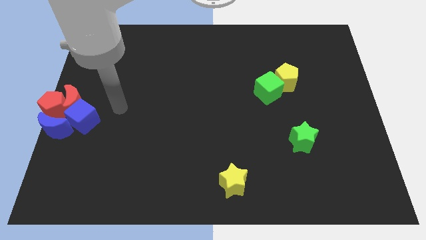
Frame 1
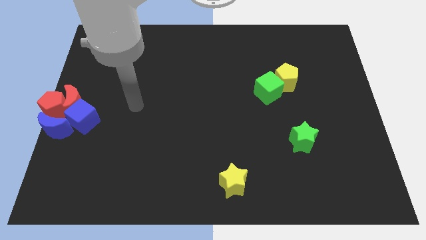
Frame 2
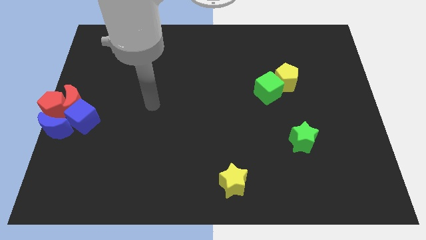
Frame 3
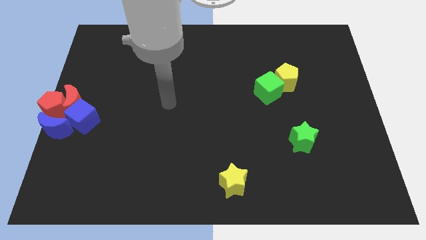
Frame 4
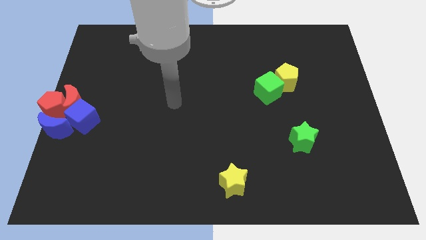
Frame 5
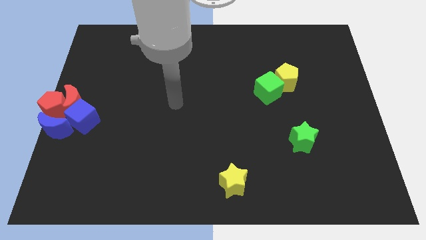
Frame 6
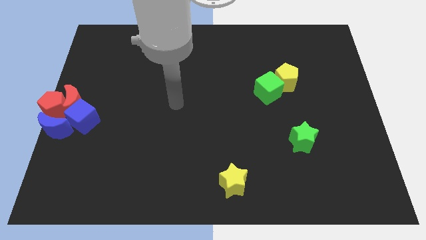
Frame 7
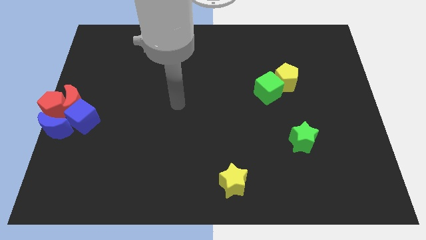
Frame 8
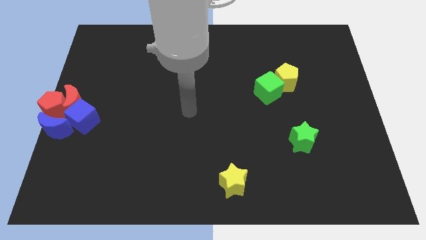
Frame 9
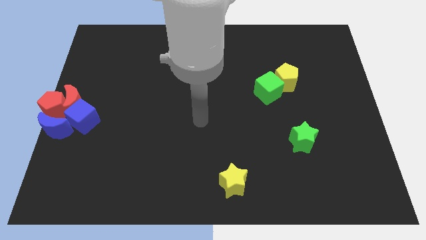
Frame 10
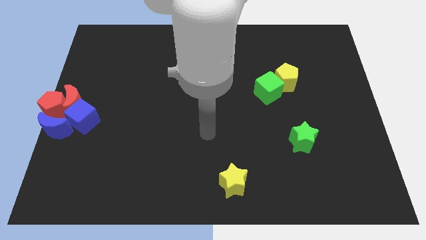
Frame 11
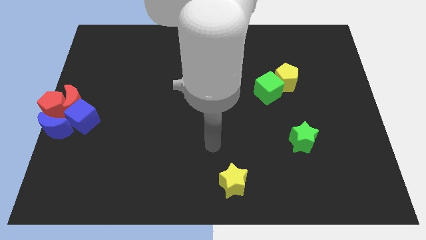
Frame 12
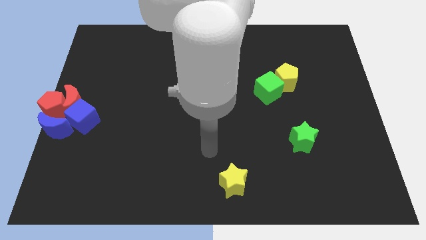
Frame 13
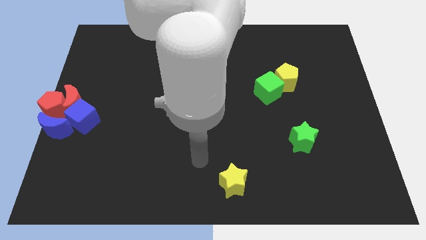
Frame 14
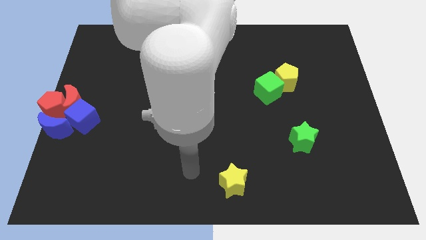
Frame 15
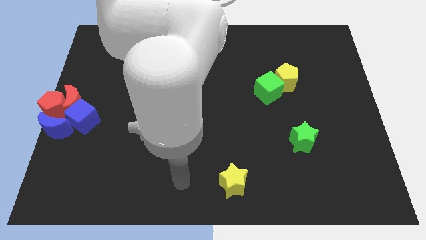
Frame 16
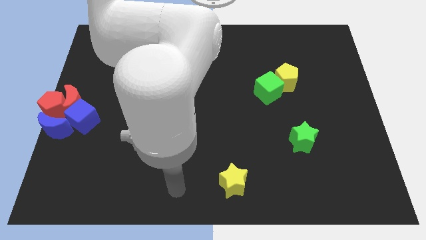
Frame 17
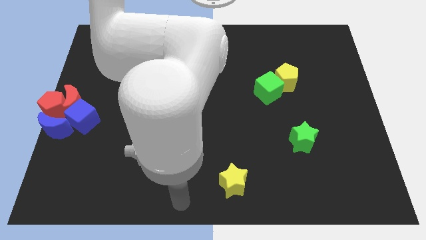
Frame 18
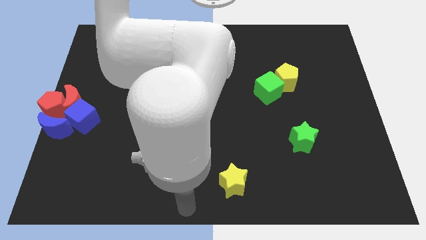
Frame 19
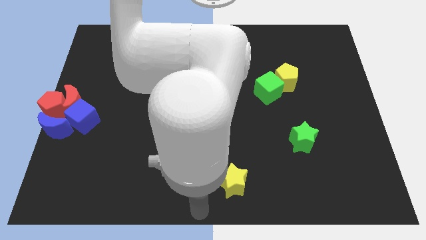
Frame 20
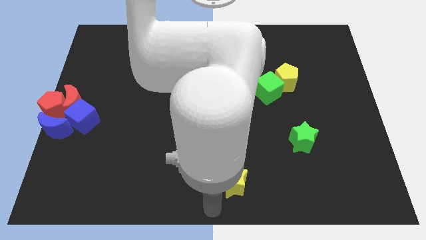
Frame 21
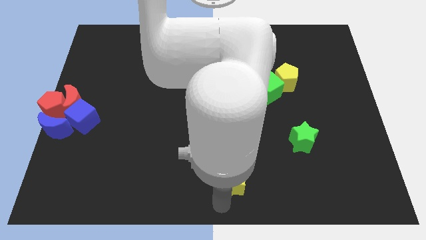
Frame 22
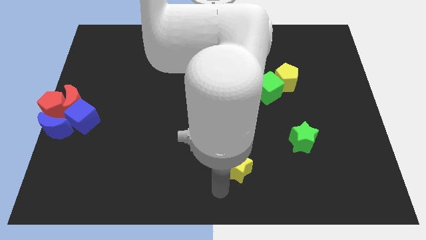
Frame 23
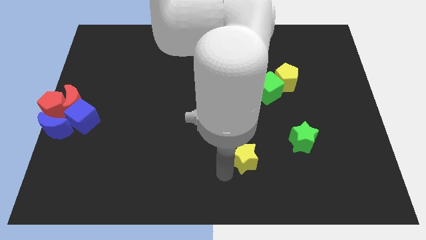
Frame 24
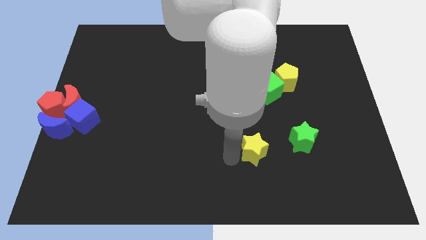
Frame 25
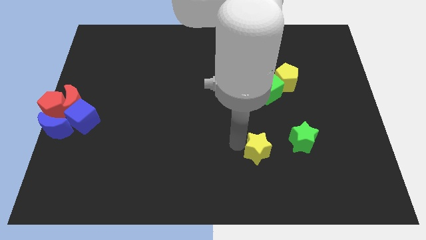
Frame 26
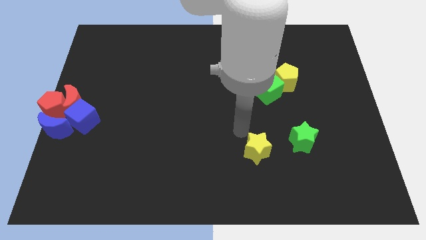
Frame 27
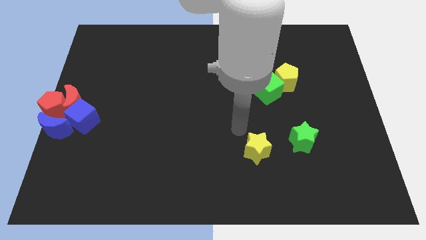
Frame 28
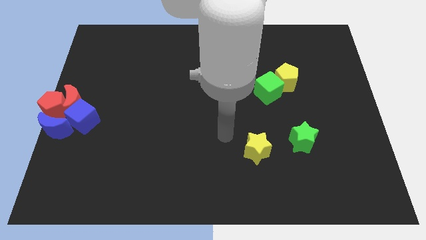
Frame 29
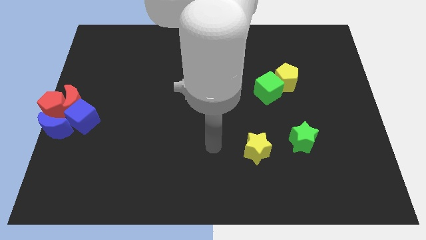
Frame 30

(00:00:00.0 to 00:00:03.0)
move the yellow star to the left of the green star

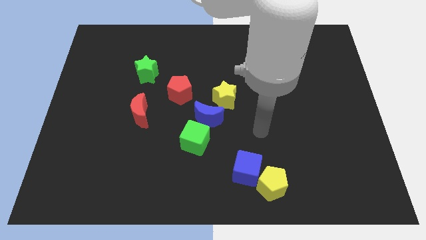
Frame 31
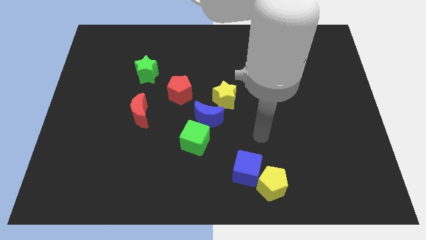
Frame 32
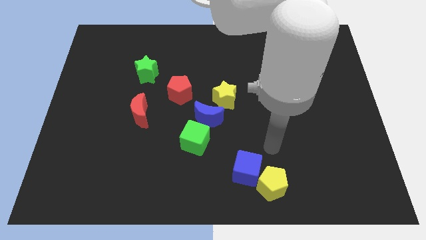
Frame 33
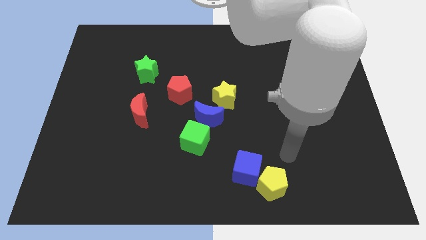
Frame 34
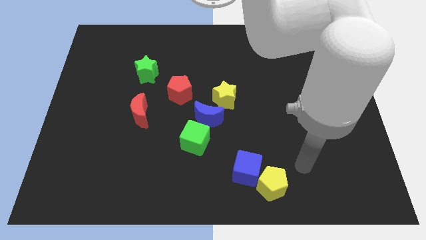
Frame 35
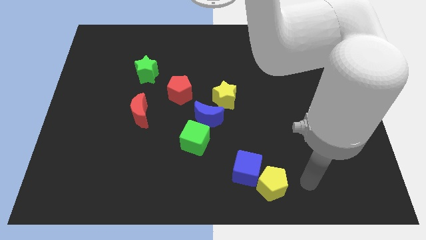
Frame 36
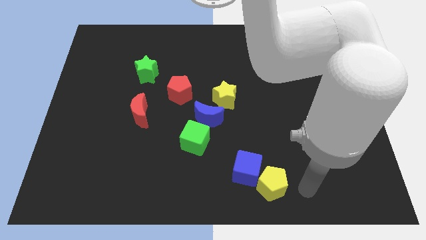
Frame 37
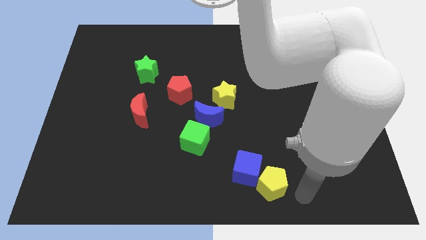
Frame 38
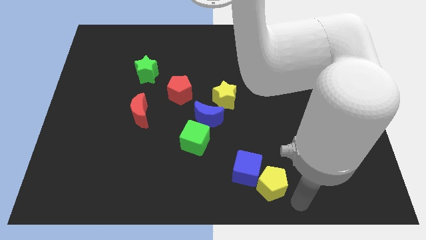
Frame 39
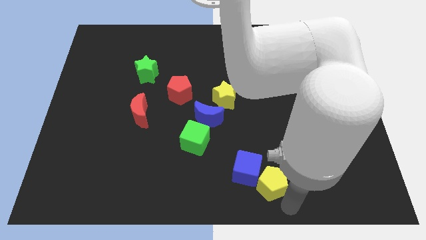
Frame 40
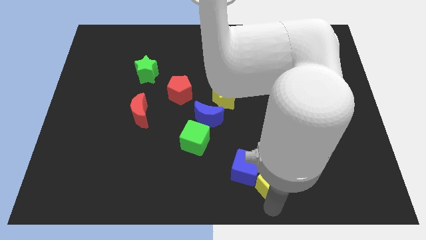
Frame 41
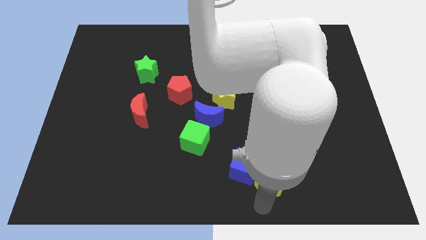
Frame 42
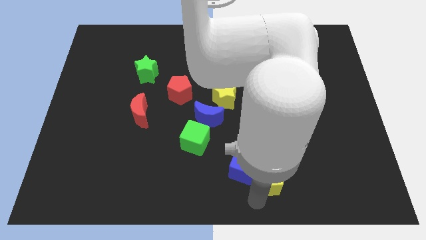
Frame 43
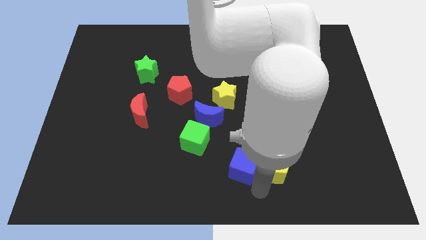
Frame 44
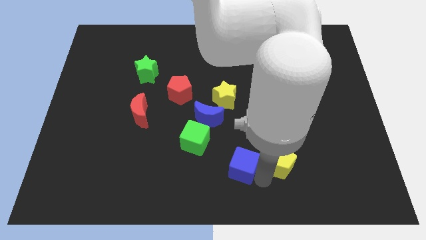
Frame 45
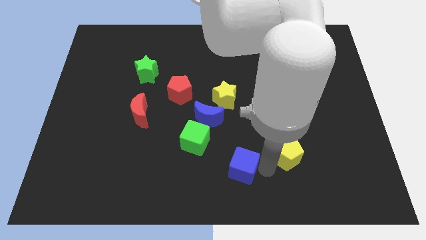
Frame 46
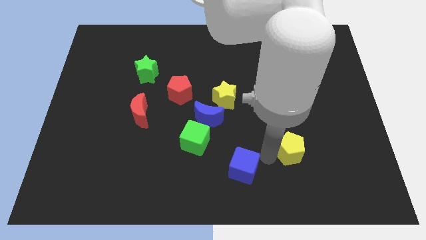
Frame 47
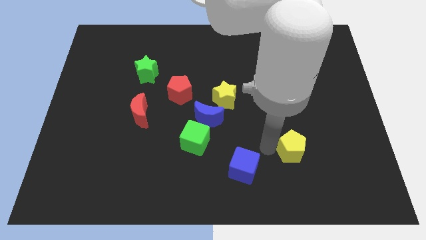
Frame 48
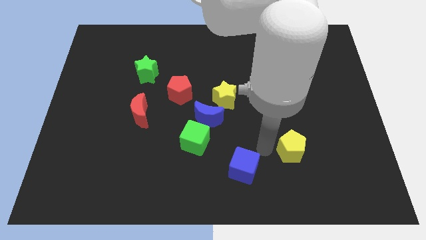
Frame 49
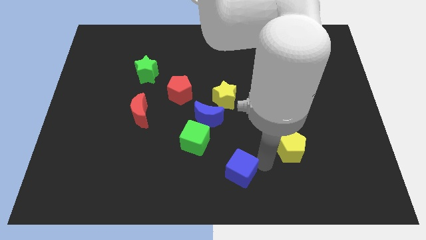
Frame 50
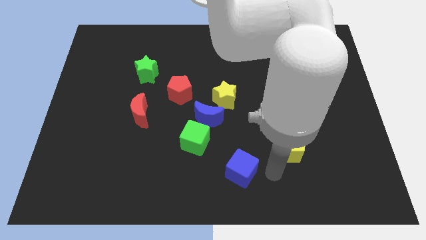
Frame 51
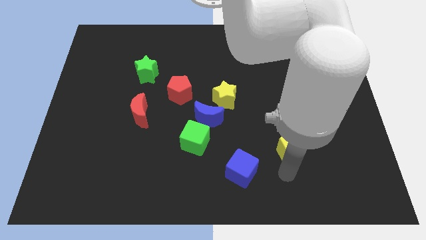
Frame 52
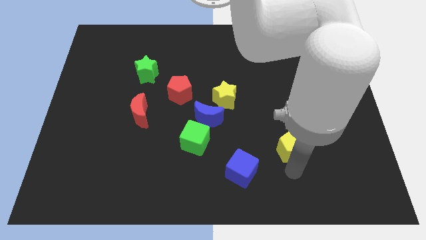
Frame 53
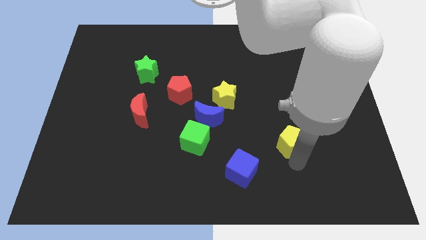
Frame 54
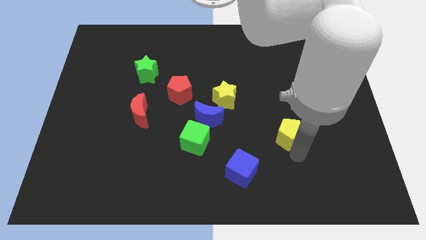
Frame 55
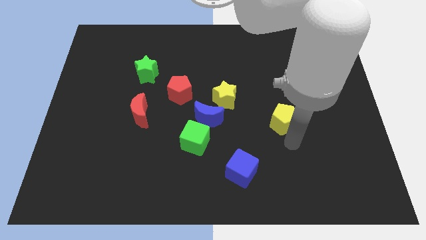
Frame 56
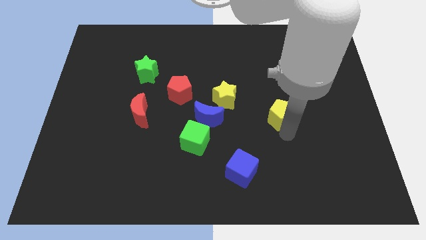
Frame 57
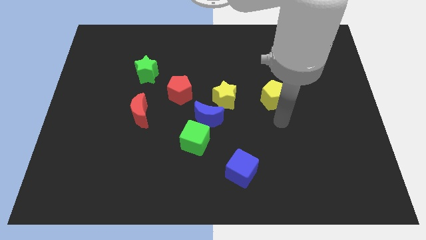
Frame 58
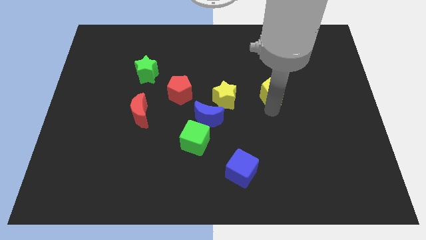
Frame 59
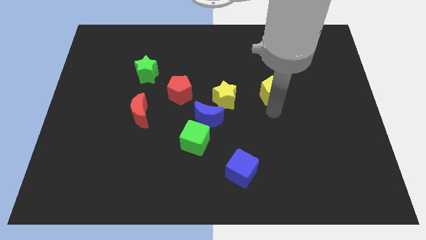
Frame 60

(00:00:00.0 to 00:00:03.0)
separate the yellow pentagon from the blue cube

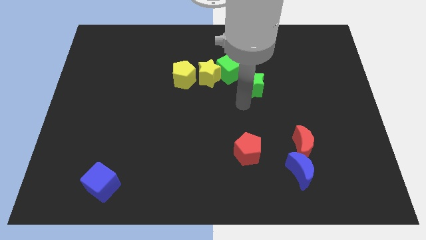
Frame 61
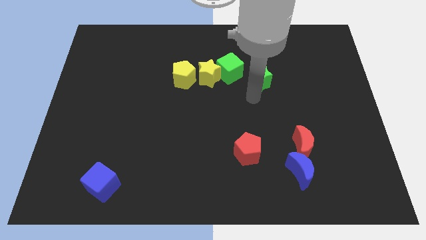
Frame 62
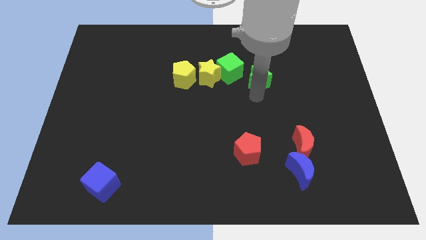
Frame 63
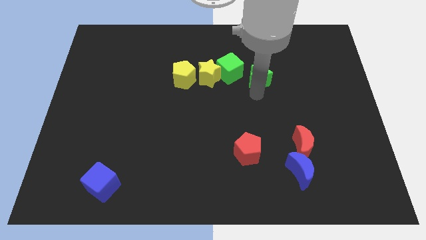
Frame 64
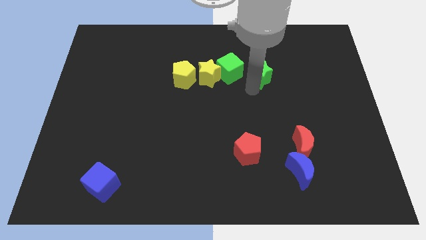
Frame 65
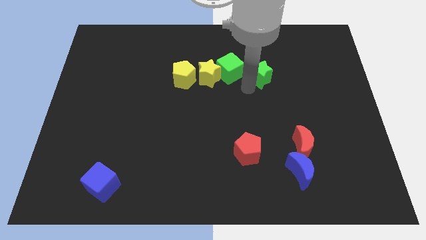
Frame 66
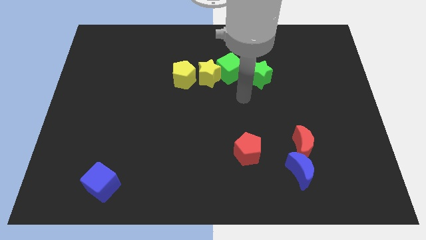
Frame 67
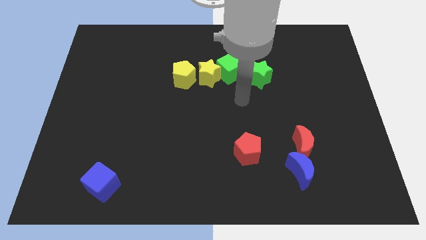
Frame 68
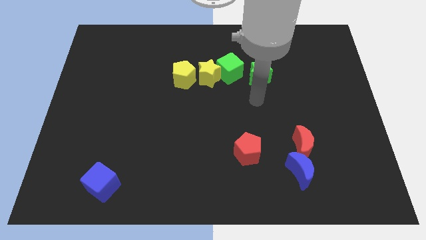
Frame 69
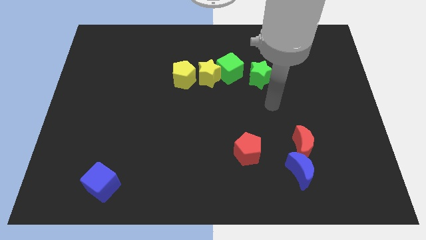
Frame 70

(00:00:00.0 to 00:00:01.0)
slightly push the green star to the right of the green cube

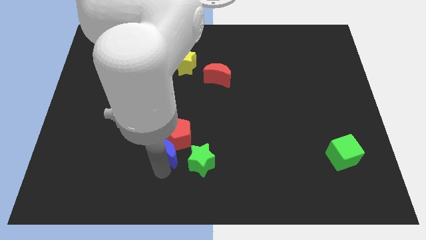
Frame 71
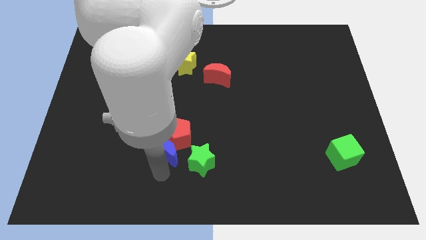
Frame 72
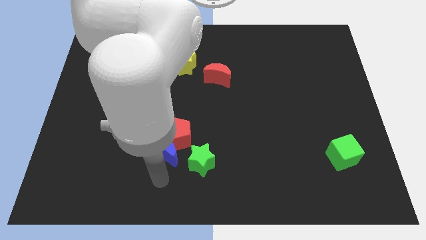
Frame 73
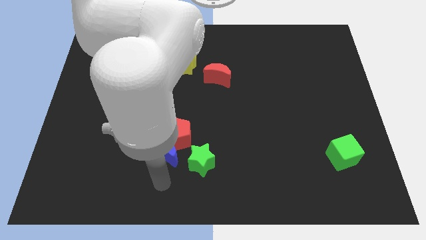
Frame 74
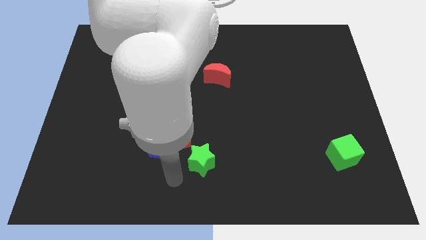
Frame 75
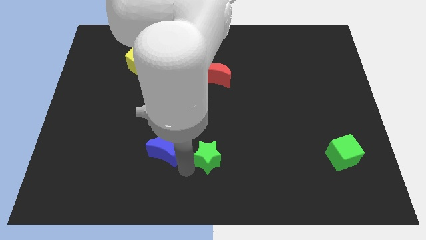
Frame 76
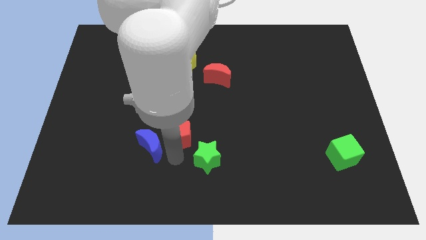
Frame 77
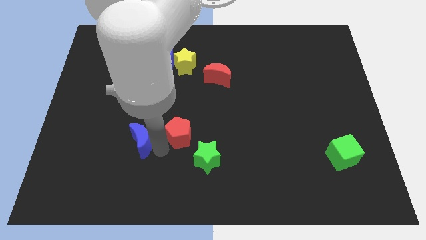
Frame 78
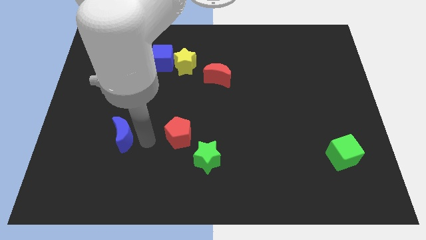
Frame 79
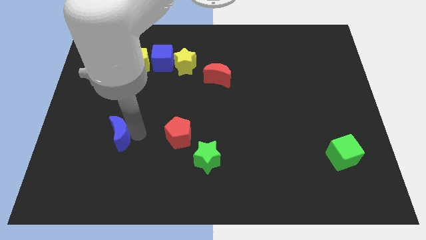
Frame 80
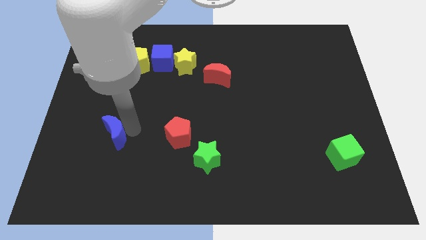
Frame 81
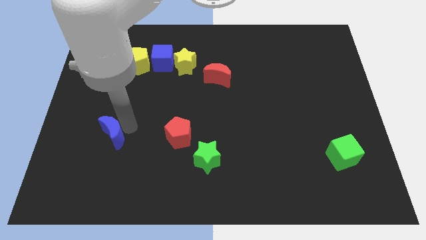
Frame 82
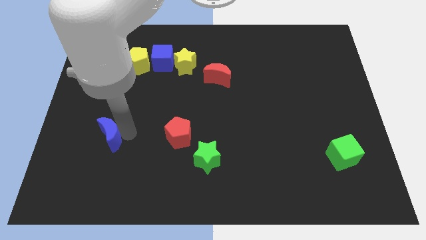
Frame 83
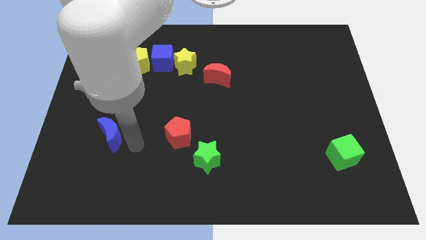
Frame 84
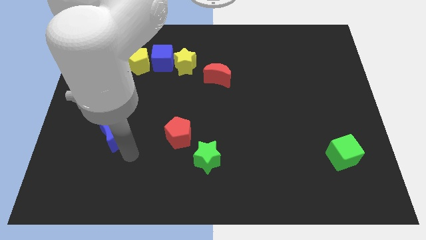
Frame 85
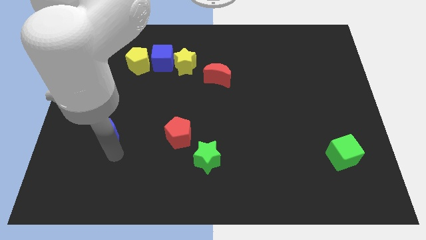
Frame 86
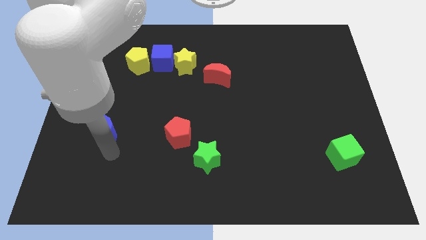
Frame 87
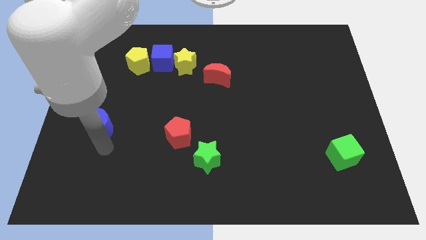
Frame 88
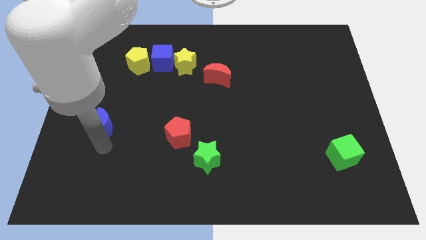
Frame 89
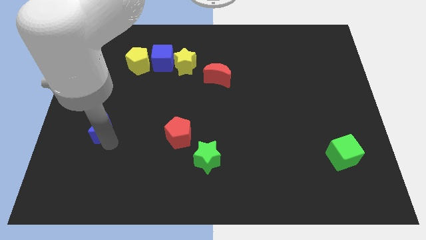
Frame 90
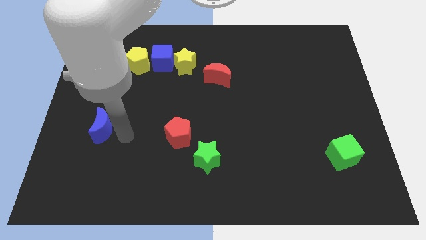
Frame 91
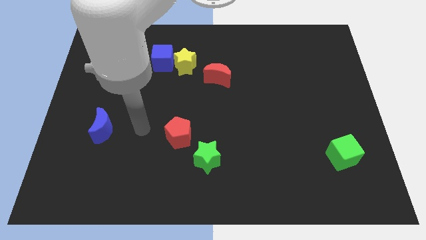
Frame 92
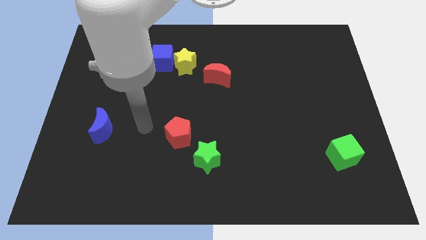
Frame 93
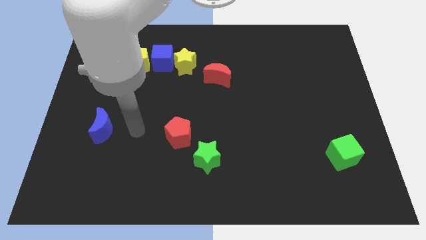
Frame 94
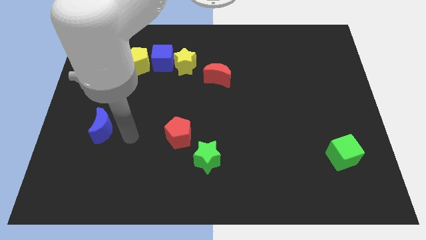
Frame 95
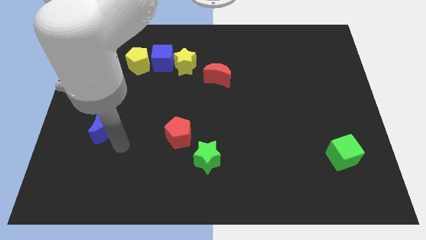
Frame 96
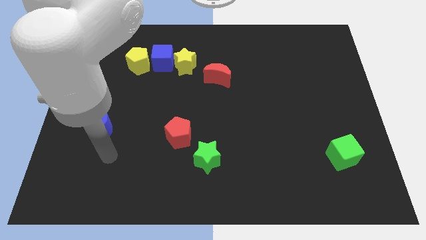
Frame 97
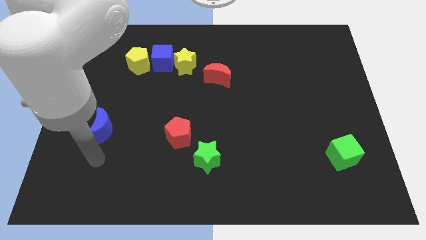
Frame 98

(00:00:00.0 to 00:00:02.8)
put blue moon parallel left to red pentagon
